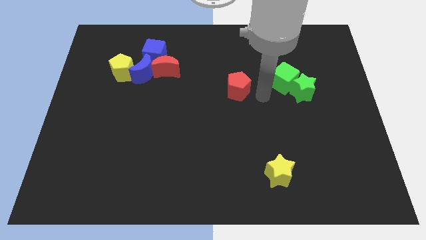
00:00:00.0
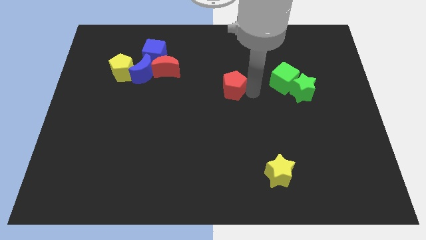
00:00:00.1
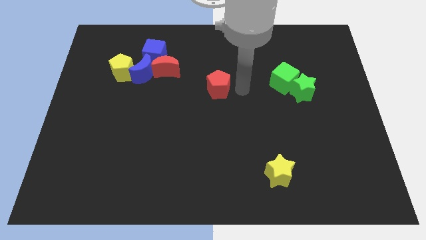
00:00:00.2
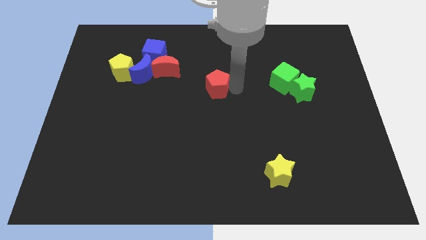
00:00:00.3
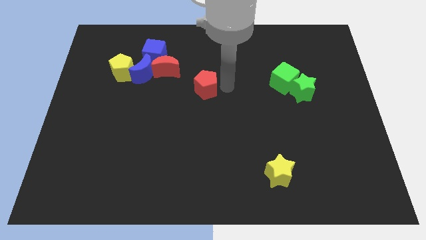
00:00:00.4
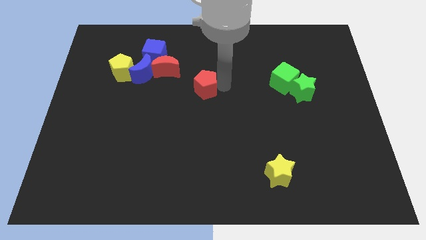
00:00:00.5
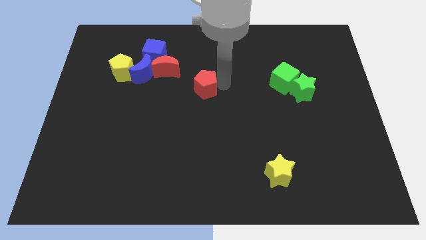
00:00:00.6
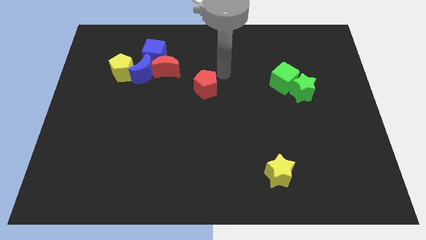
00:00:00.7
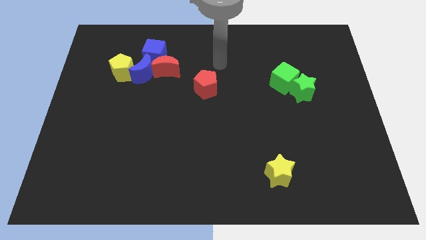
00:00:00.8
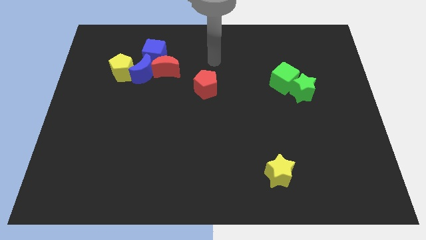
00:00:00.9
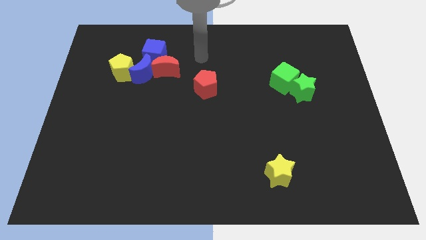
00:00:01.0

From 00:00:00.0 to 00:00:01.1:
place the red pentagon to the bottom right of the red moon

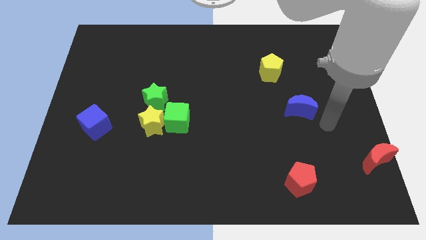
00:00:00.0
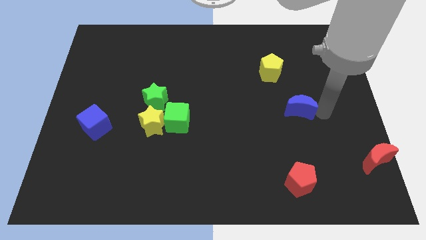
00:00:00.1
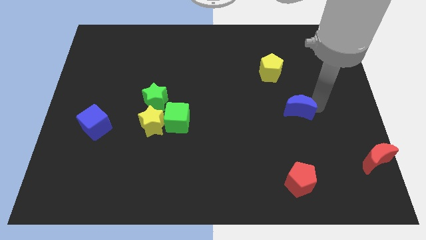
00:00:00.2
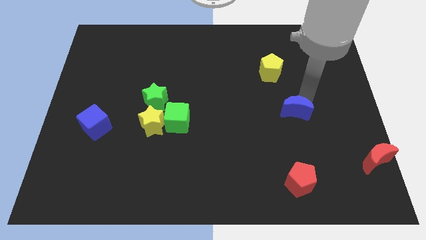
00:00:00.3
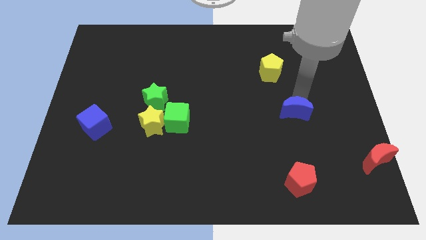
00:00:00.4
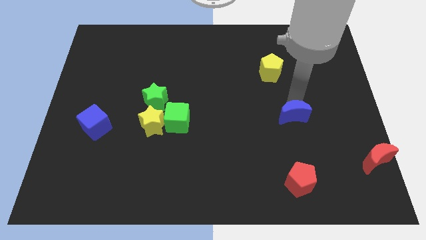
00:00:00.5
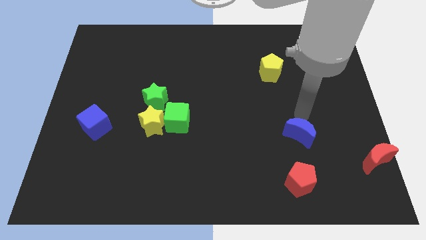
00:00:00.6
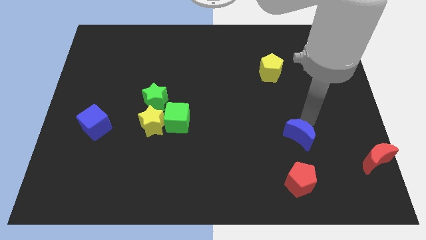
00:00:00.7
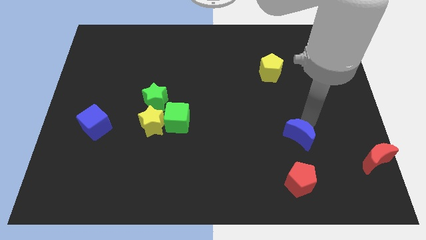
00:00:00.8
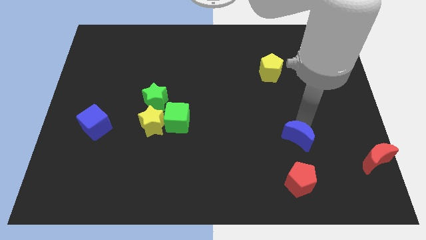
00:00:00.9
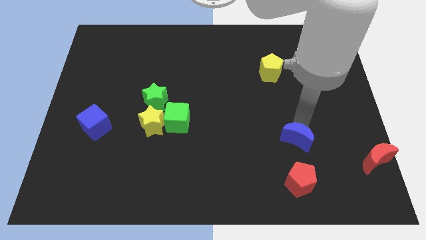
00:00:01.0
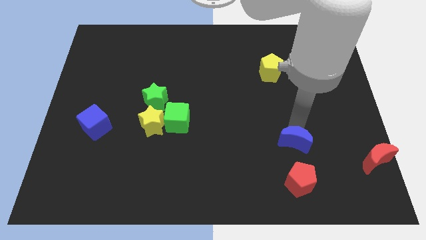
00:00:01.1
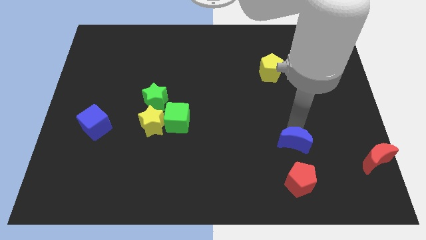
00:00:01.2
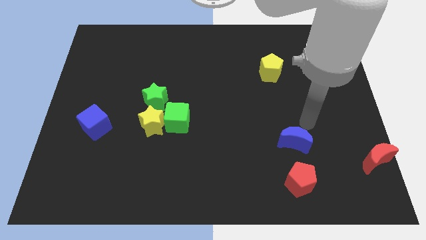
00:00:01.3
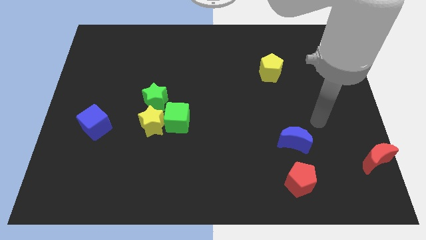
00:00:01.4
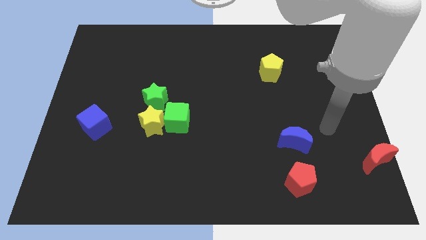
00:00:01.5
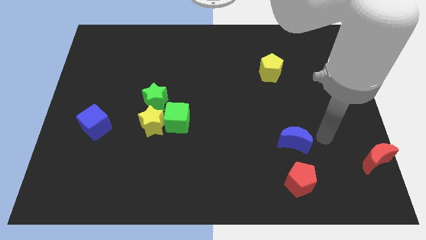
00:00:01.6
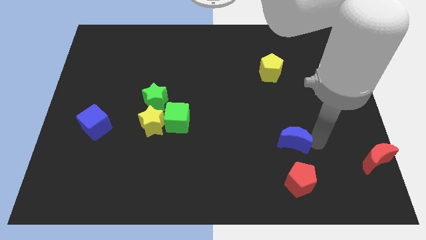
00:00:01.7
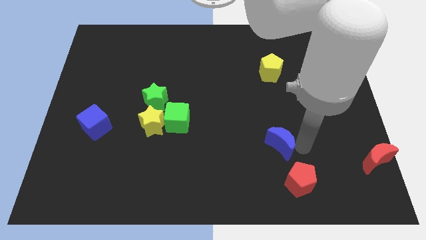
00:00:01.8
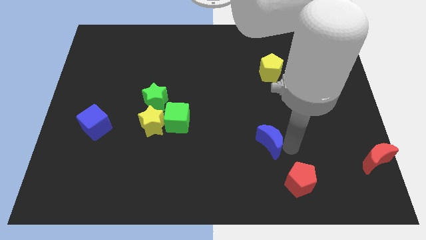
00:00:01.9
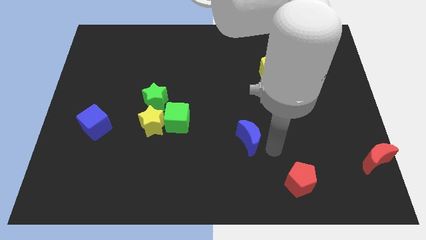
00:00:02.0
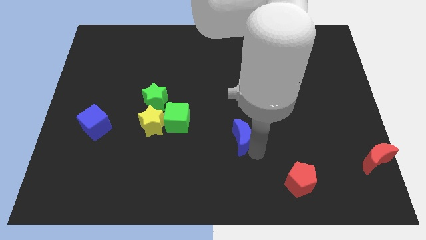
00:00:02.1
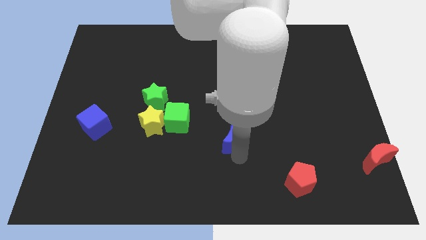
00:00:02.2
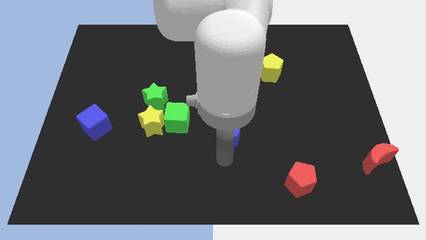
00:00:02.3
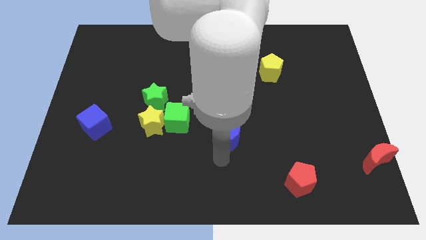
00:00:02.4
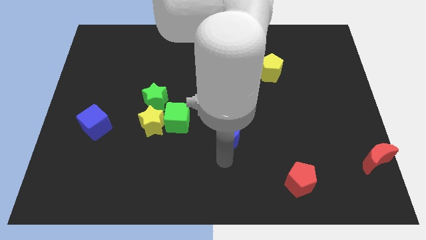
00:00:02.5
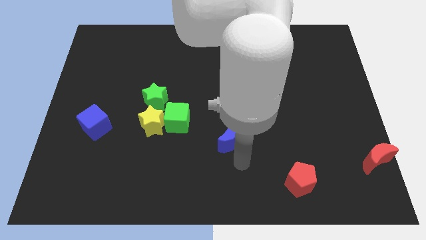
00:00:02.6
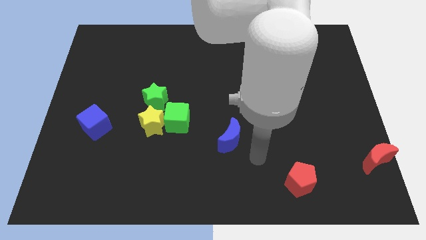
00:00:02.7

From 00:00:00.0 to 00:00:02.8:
move the blue moon towards the green cube

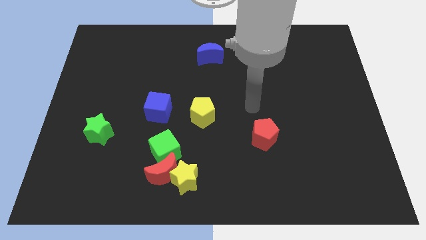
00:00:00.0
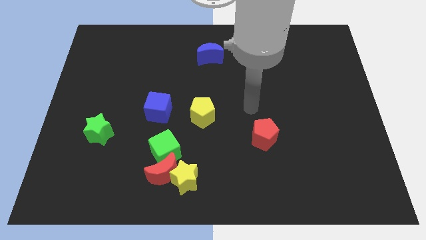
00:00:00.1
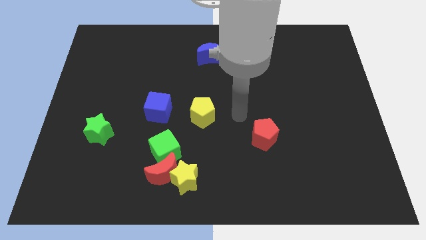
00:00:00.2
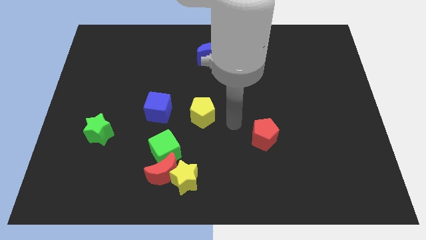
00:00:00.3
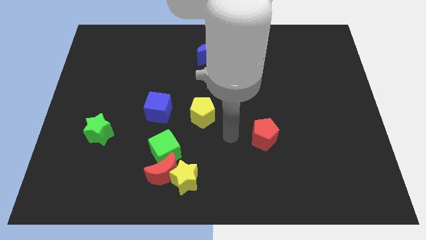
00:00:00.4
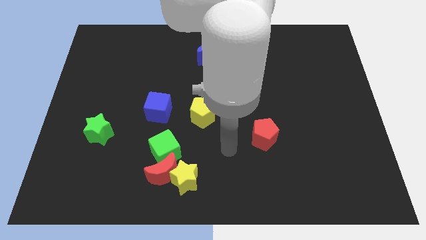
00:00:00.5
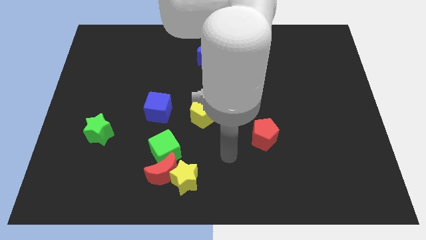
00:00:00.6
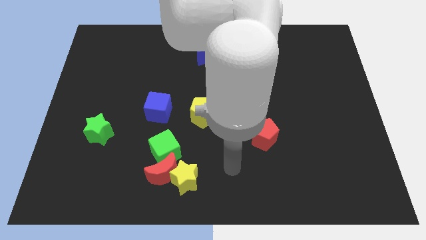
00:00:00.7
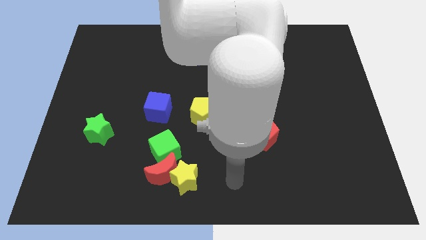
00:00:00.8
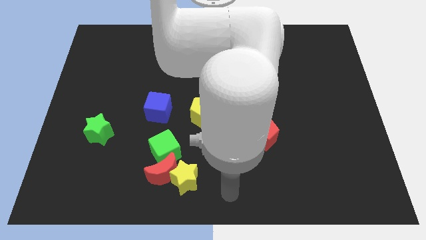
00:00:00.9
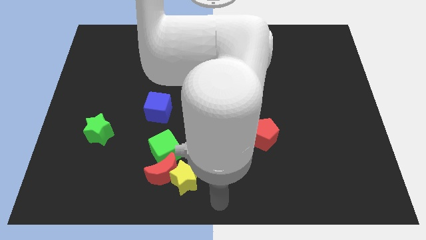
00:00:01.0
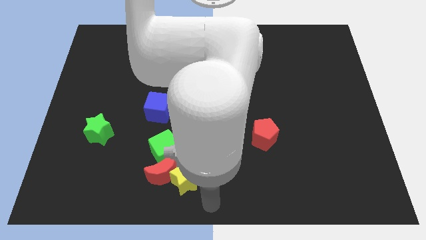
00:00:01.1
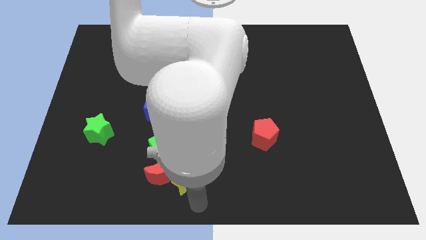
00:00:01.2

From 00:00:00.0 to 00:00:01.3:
move your arm towards the yellow star

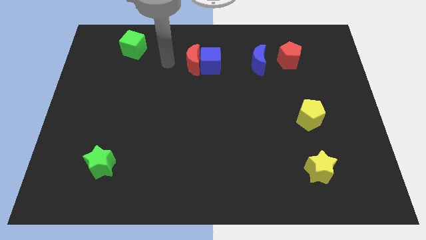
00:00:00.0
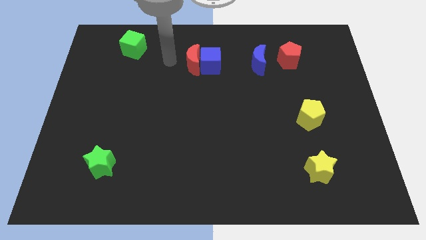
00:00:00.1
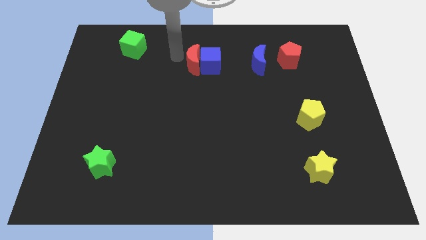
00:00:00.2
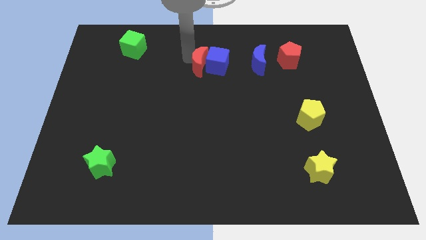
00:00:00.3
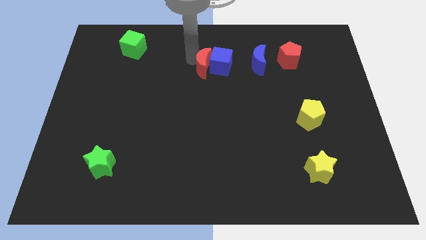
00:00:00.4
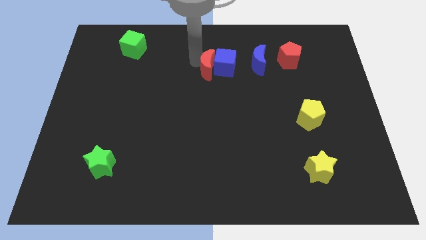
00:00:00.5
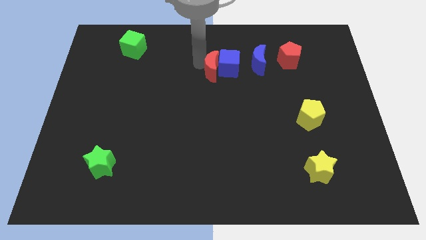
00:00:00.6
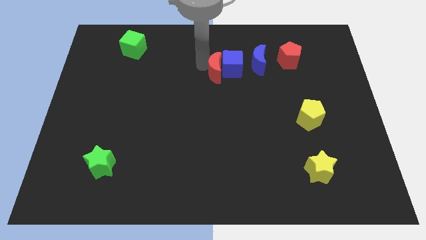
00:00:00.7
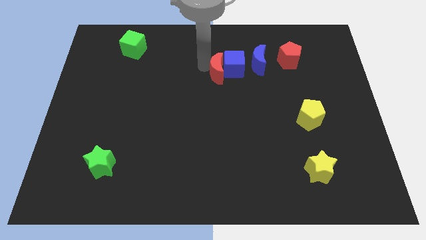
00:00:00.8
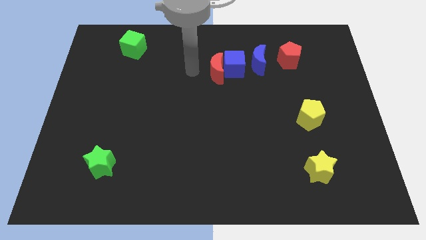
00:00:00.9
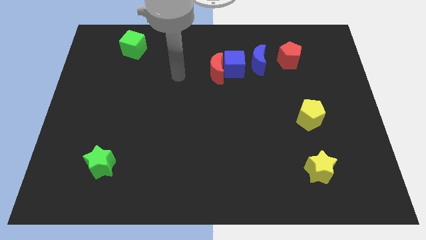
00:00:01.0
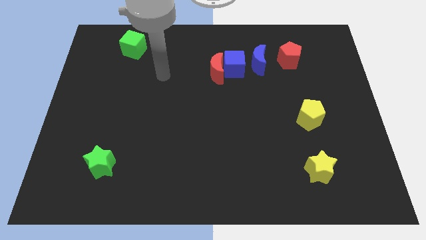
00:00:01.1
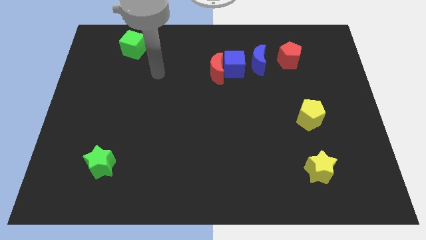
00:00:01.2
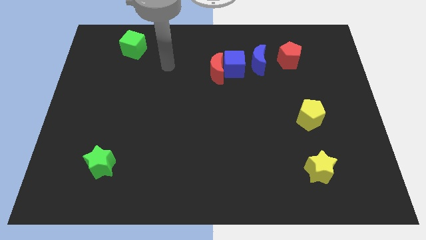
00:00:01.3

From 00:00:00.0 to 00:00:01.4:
push the blue cube and red crescent towards the blue crescent

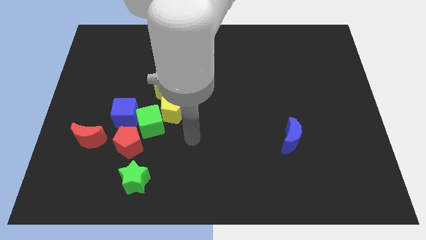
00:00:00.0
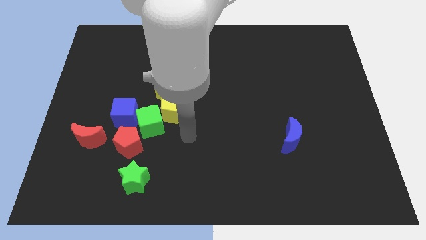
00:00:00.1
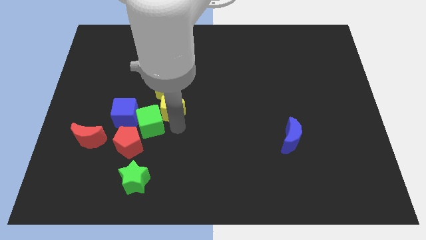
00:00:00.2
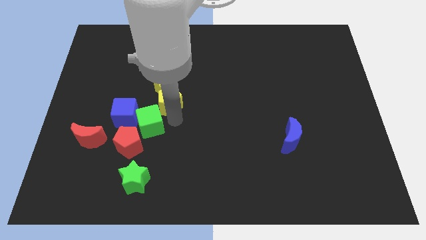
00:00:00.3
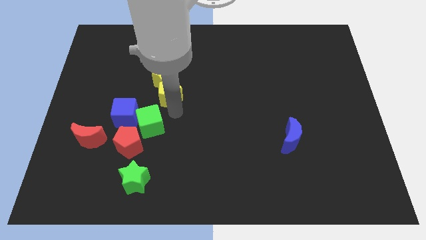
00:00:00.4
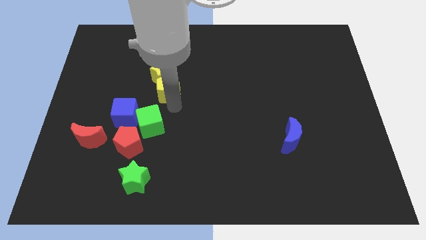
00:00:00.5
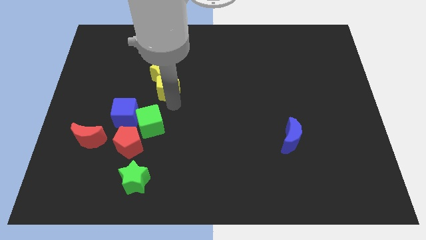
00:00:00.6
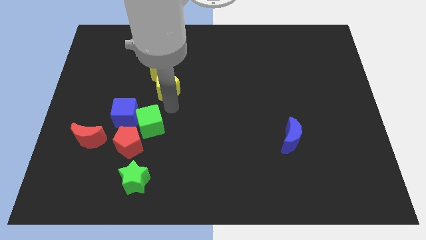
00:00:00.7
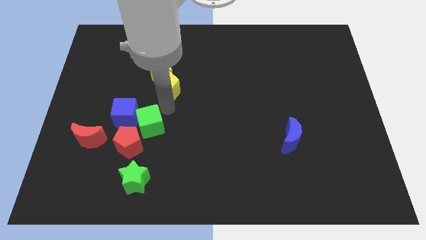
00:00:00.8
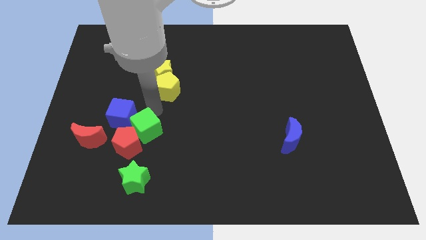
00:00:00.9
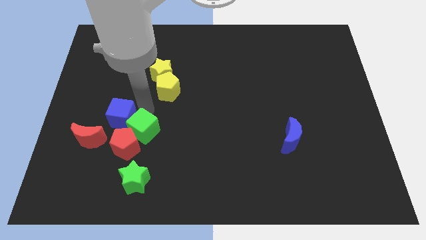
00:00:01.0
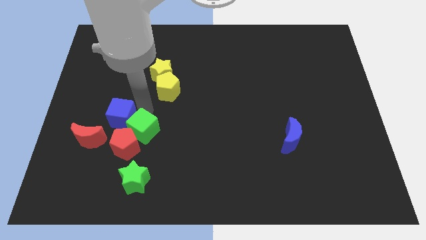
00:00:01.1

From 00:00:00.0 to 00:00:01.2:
separate the yellow blocks and green cube

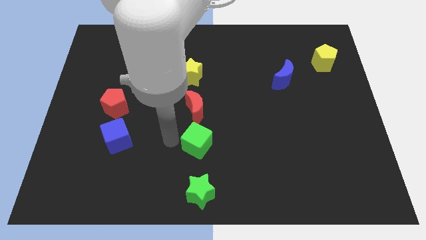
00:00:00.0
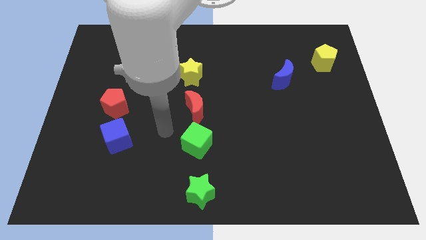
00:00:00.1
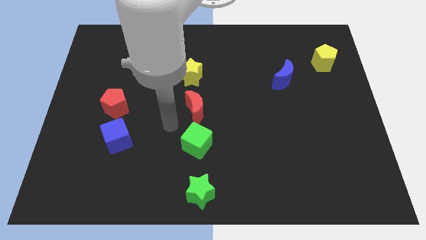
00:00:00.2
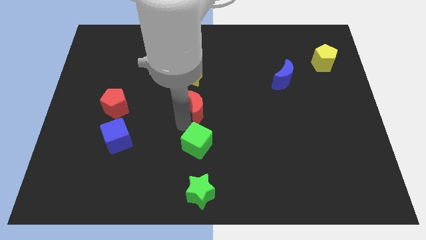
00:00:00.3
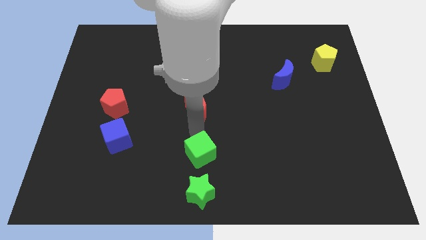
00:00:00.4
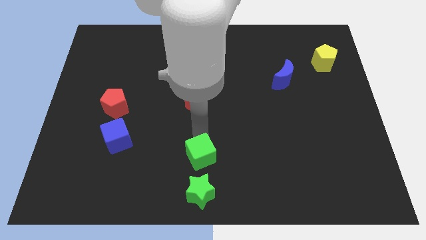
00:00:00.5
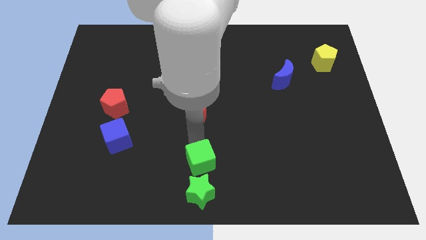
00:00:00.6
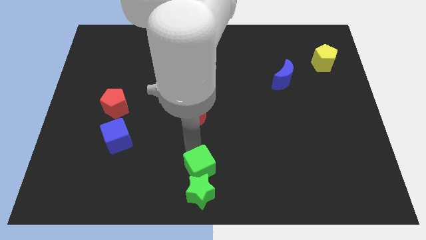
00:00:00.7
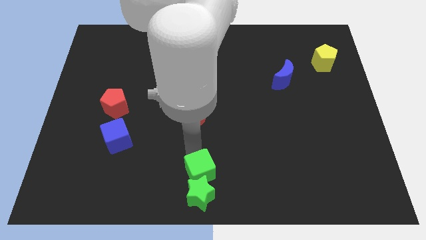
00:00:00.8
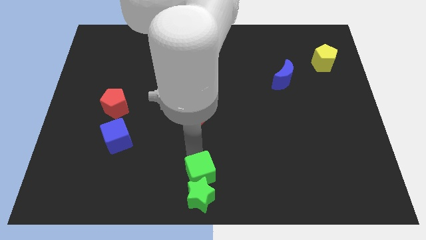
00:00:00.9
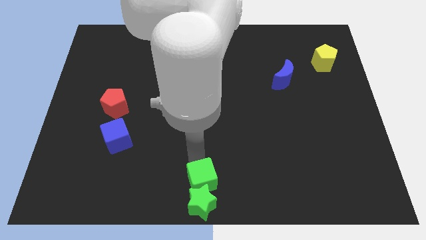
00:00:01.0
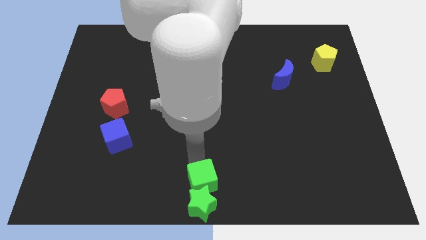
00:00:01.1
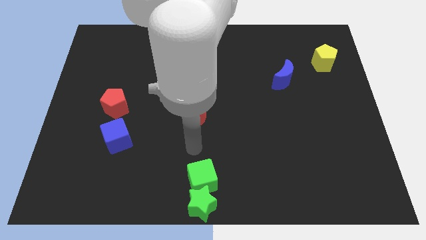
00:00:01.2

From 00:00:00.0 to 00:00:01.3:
move the green cube into the top side of the green star
